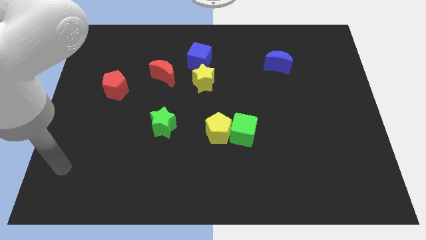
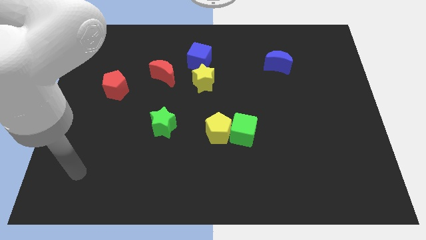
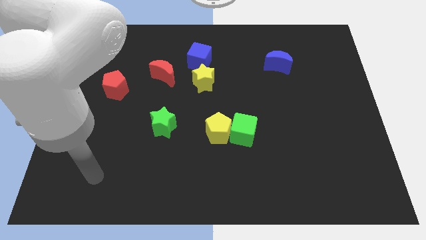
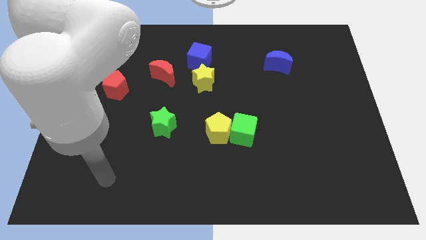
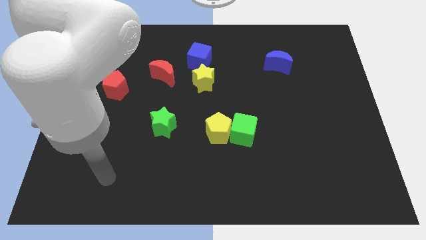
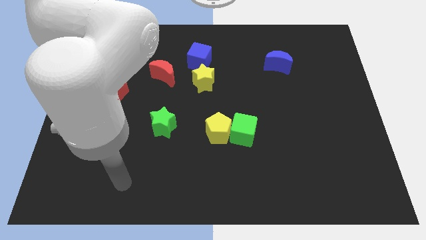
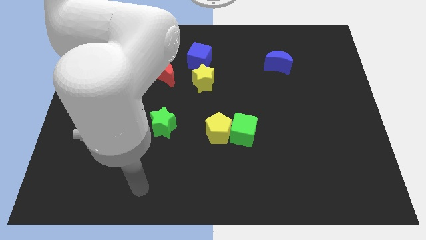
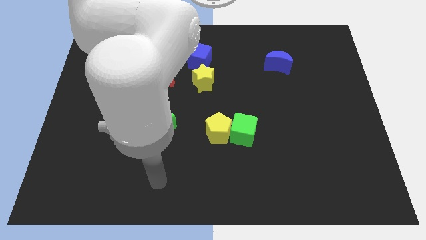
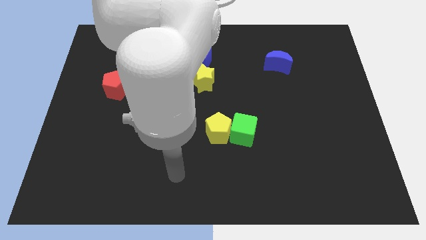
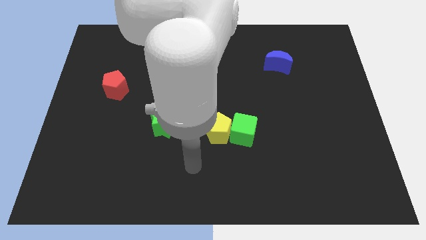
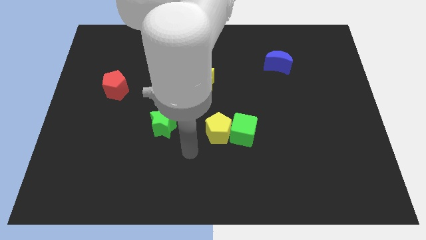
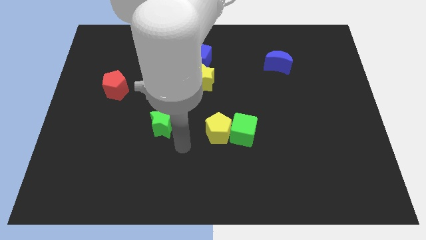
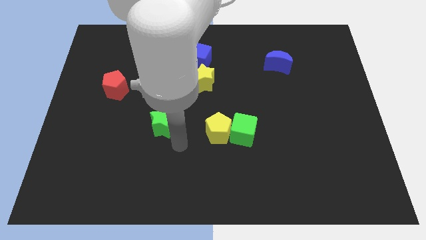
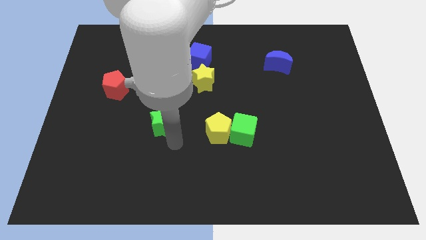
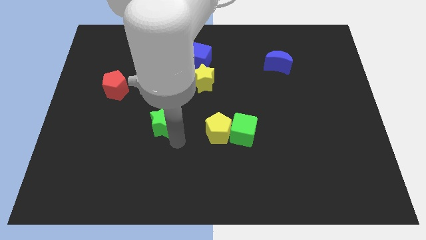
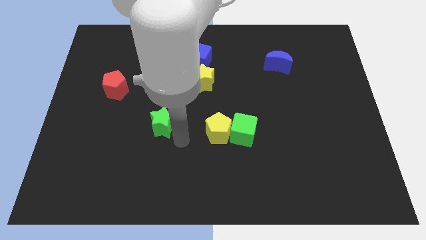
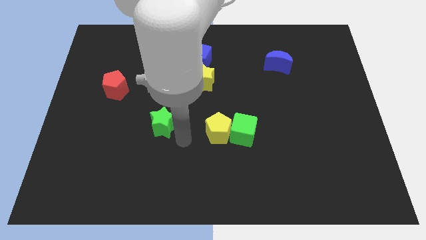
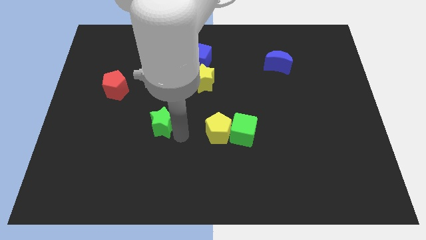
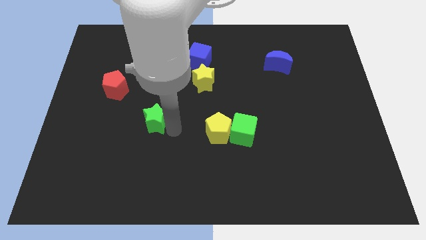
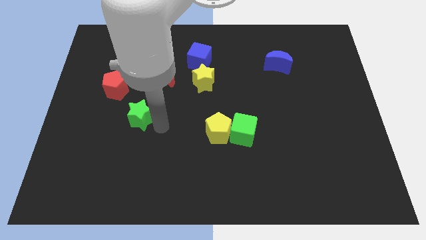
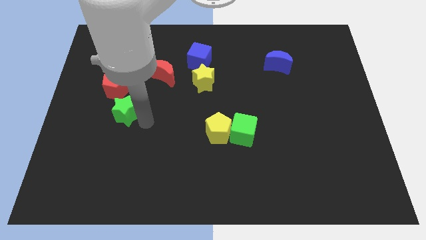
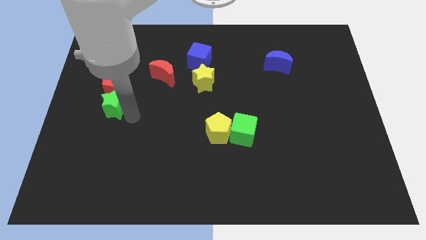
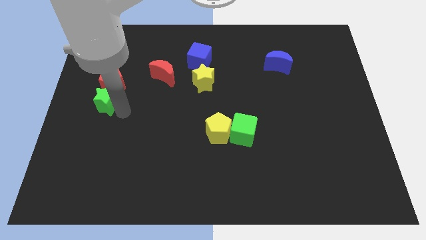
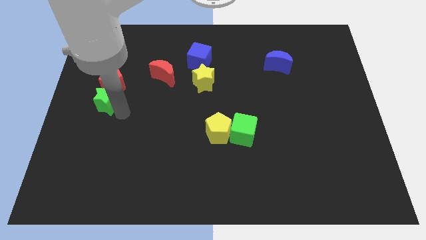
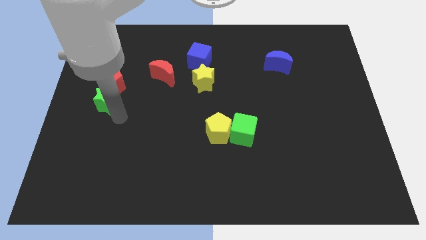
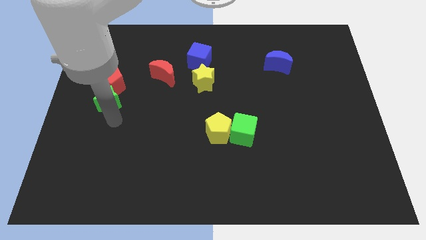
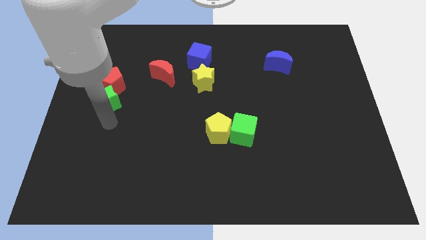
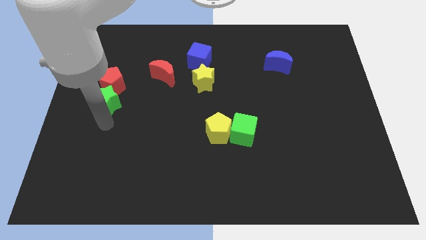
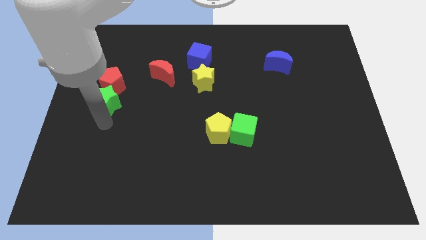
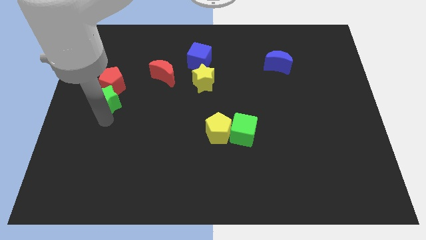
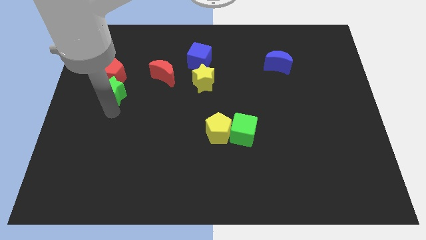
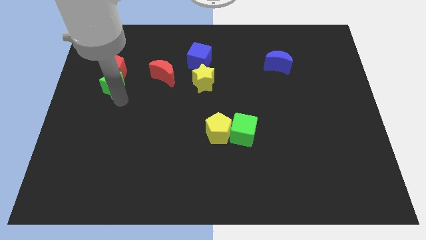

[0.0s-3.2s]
push the green star to the bottom of the red pentagon

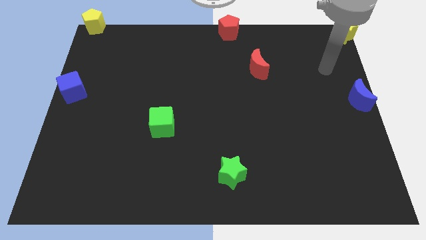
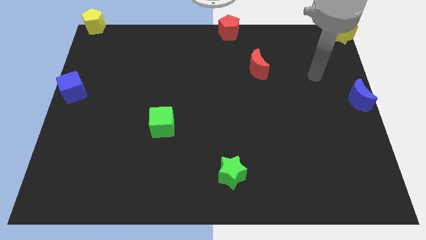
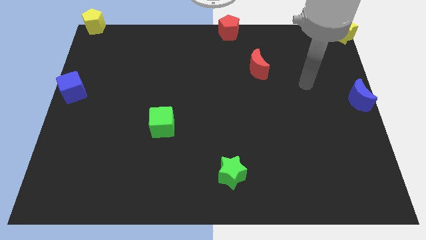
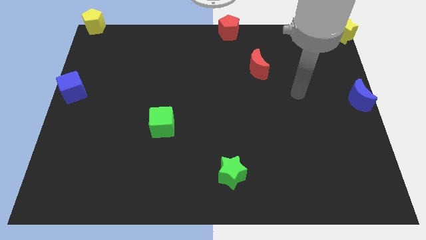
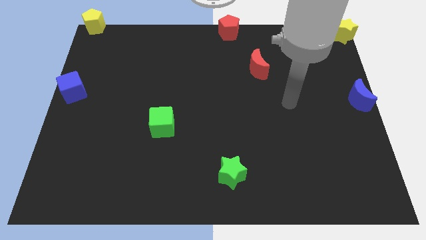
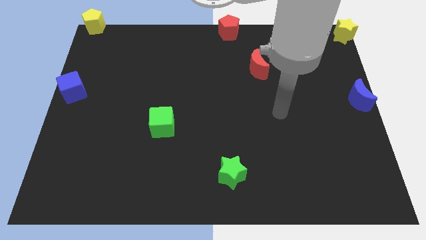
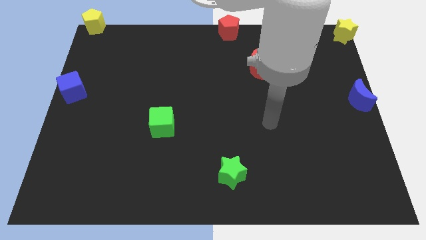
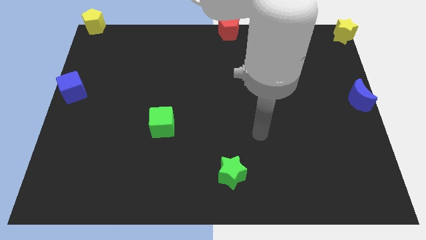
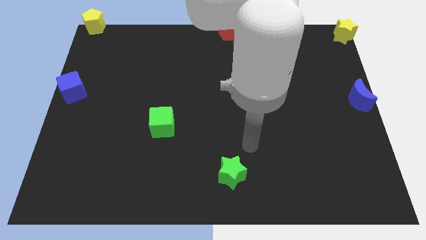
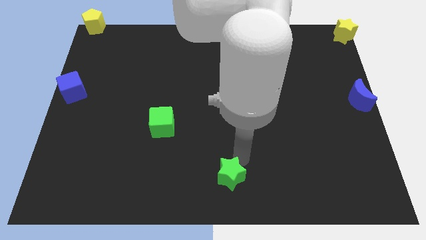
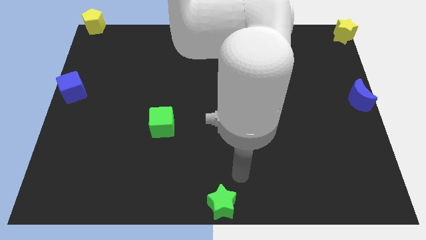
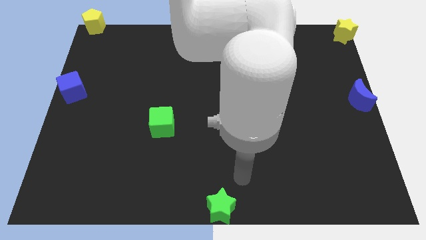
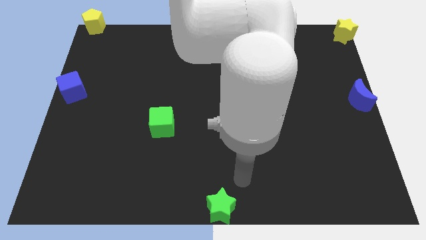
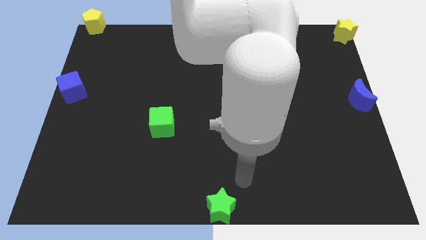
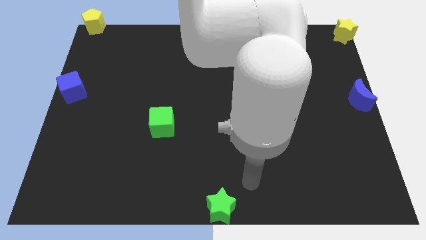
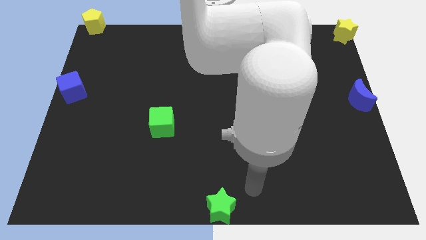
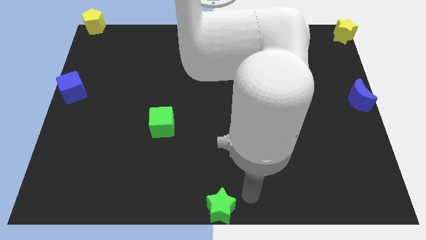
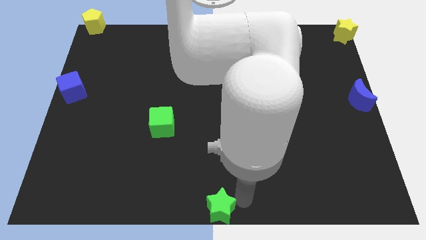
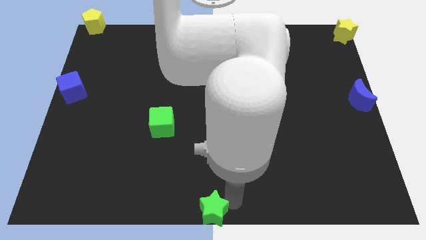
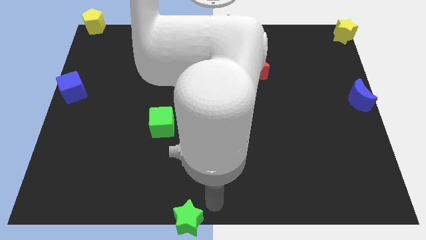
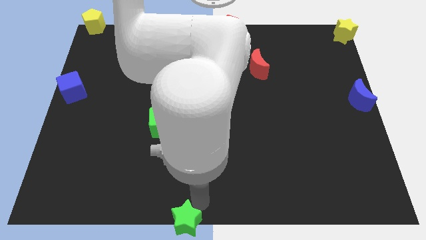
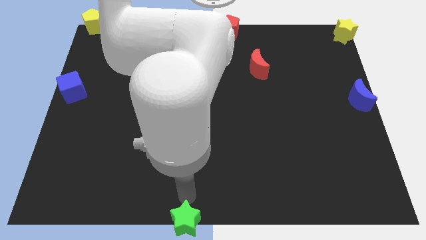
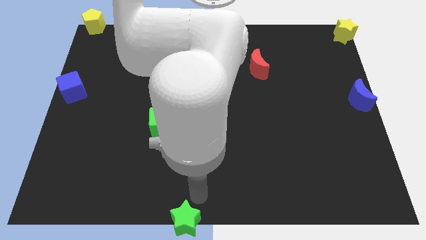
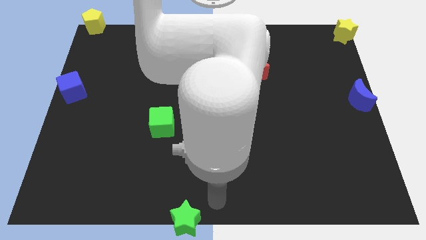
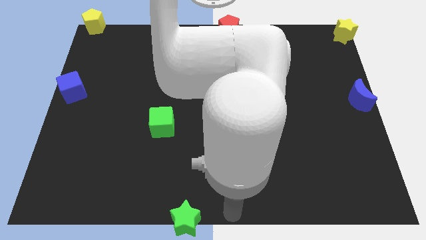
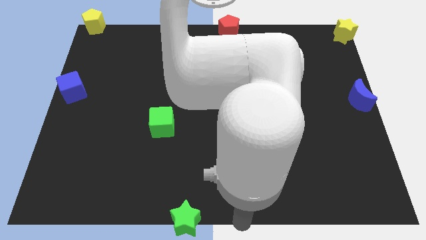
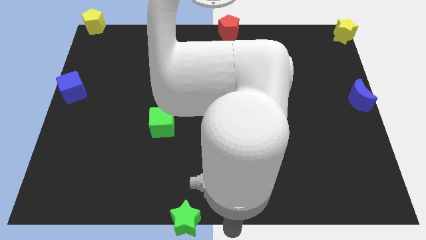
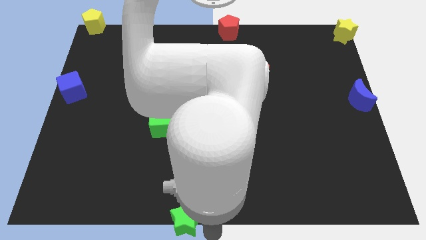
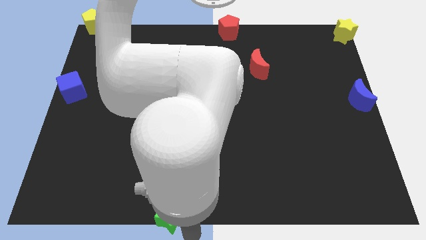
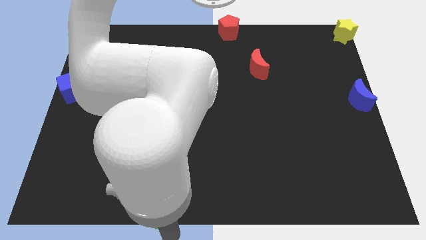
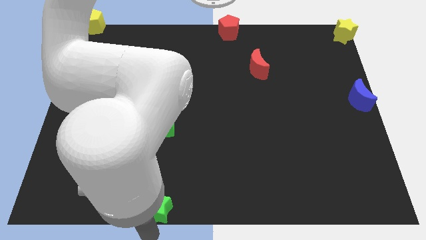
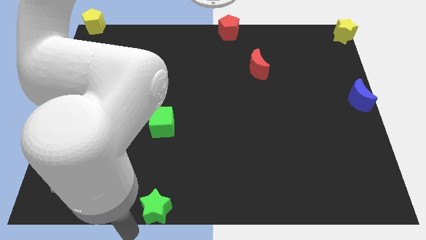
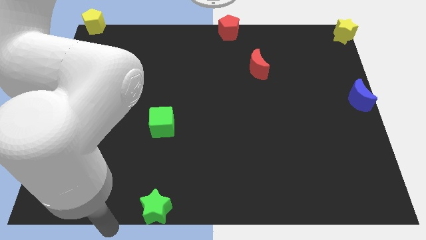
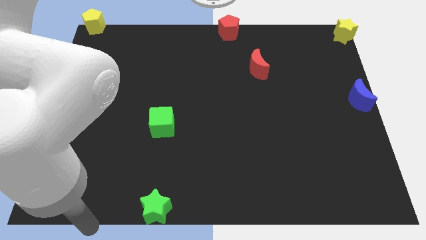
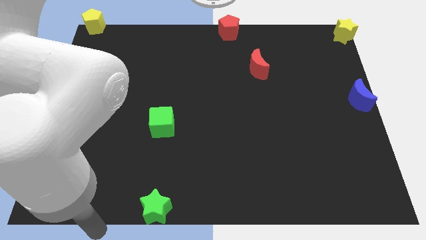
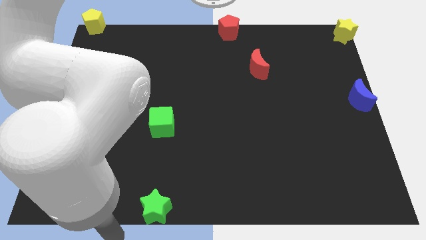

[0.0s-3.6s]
push the green star to the bottom middle of the board

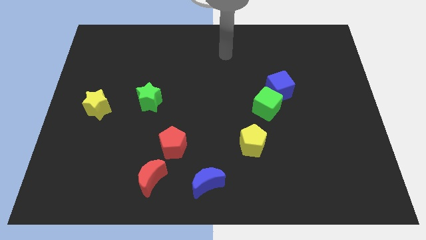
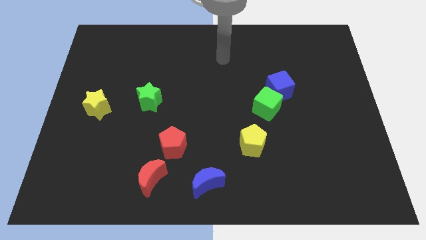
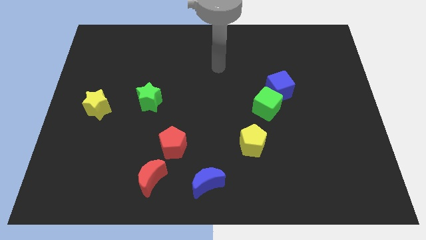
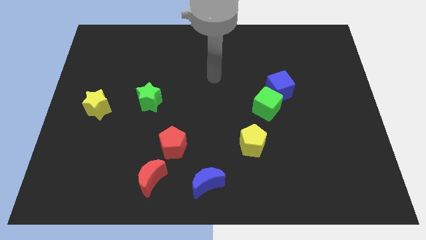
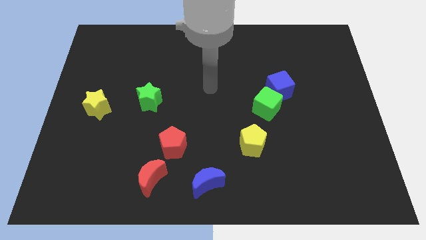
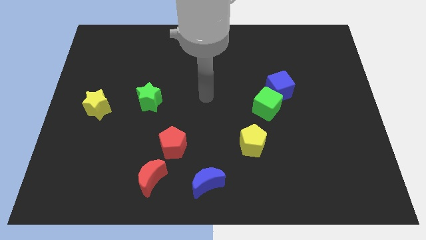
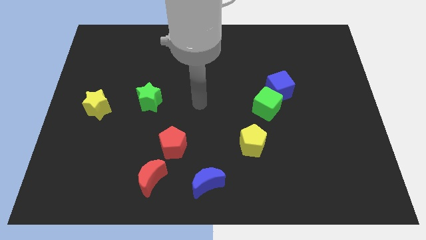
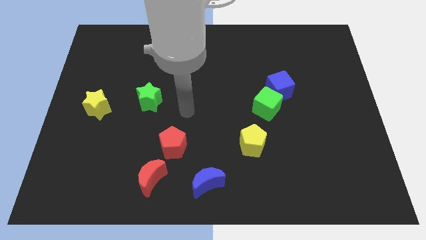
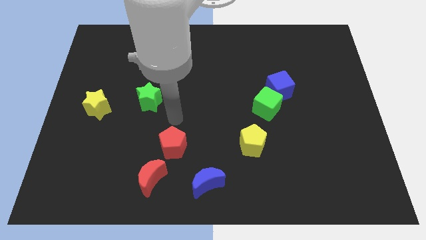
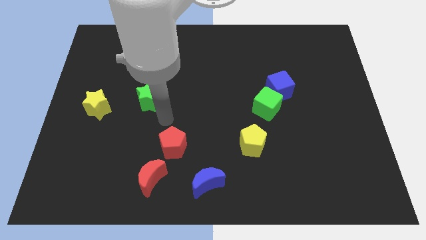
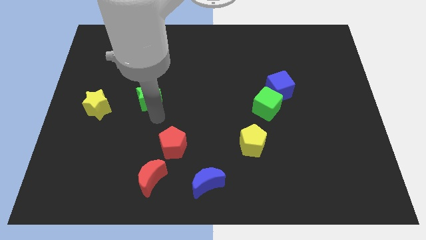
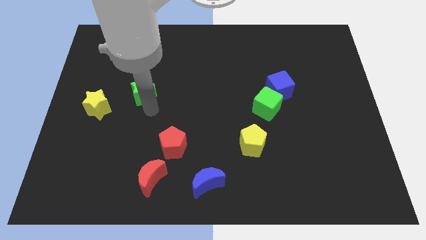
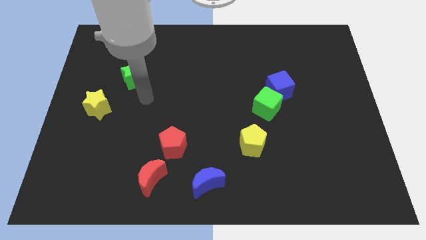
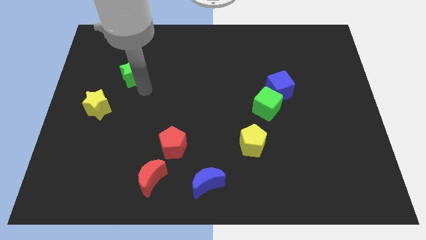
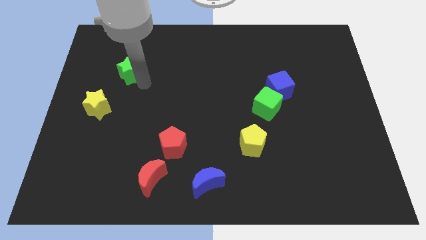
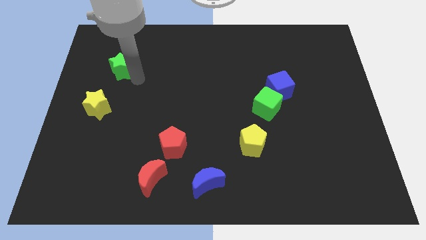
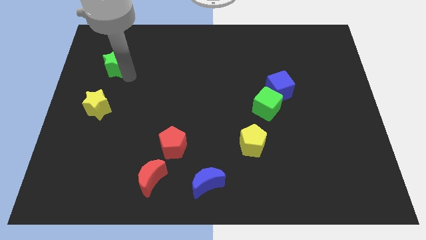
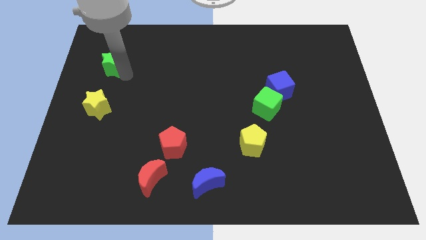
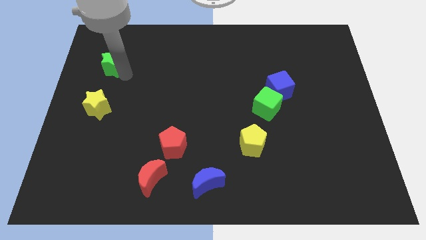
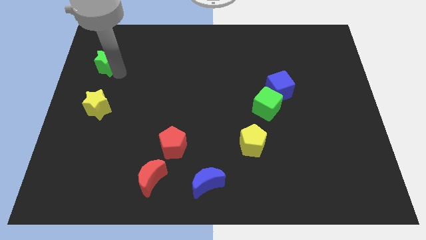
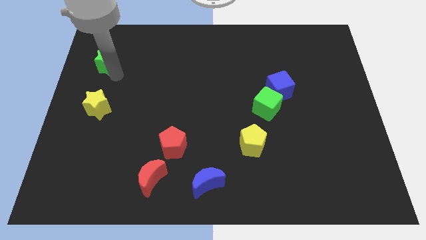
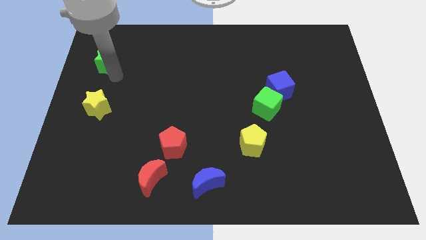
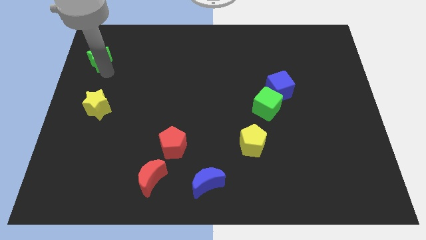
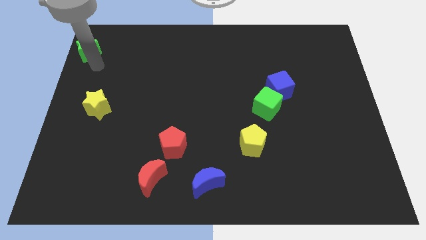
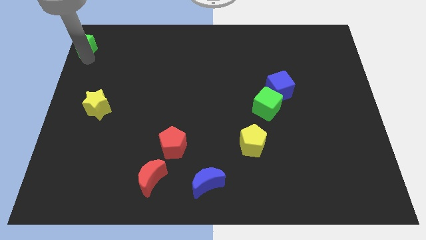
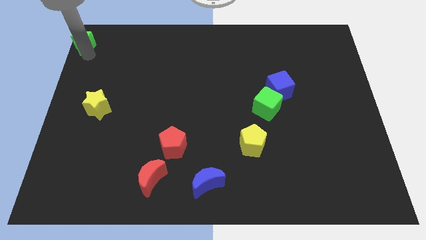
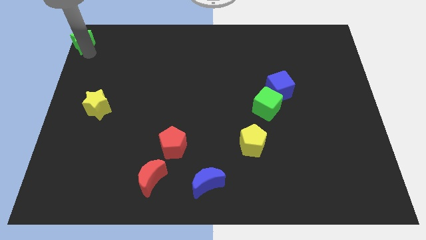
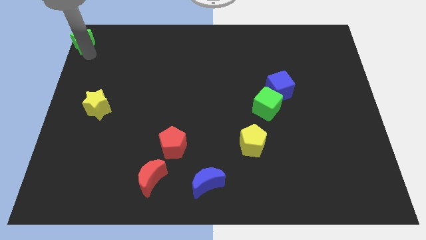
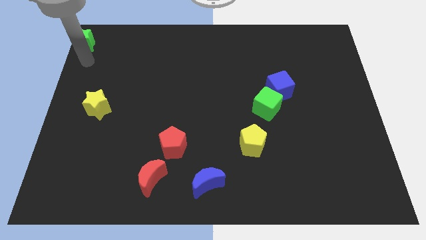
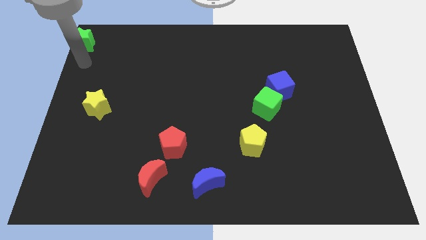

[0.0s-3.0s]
move the green star to top left
